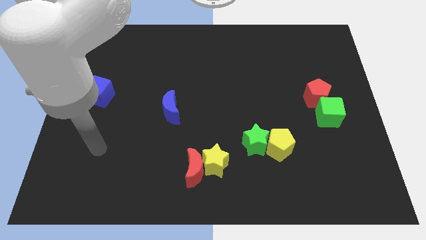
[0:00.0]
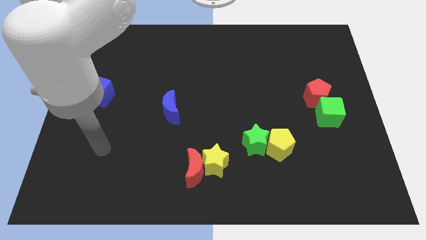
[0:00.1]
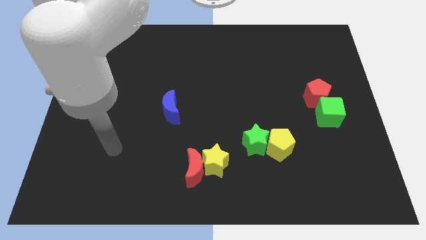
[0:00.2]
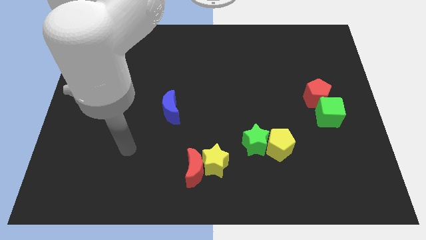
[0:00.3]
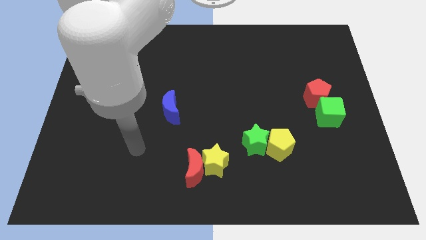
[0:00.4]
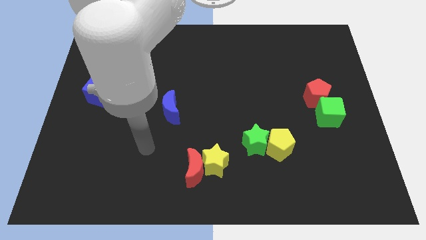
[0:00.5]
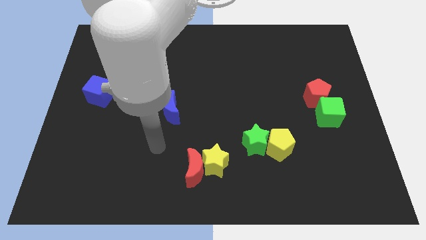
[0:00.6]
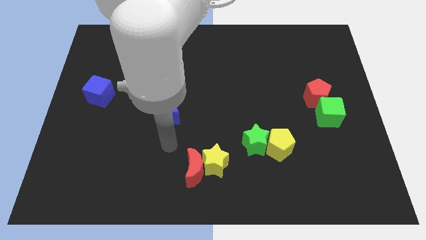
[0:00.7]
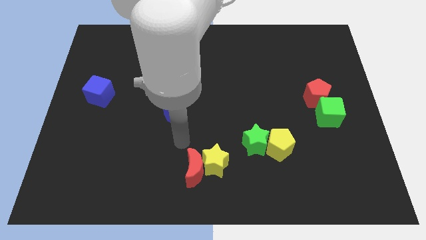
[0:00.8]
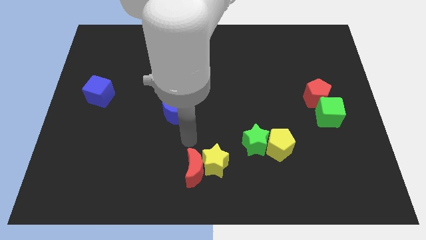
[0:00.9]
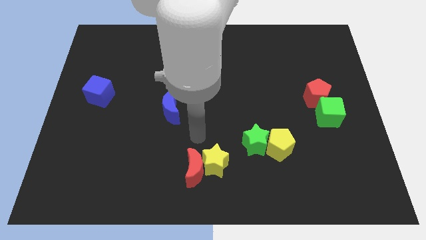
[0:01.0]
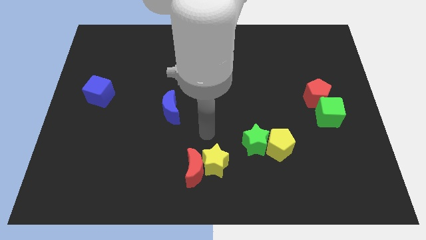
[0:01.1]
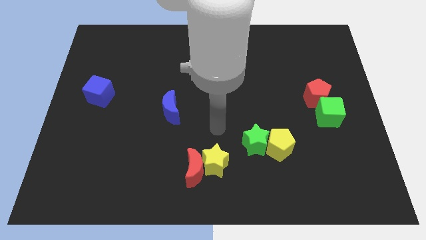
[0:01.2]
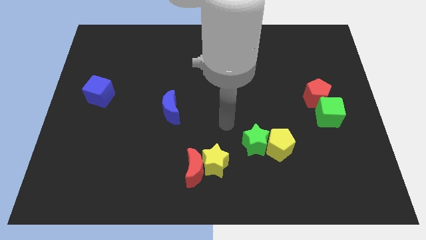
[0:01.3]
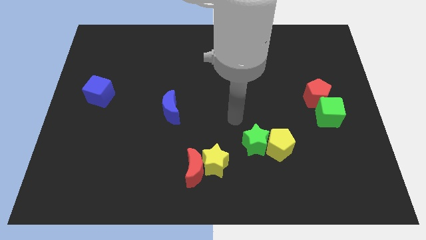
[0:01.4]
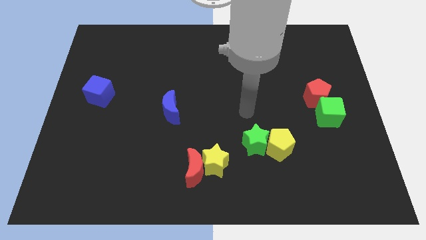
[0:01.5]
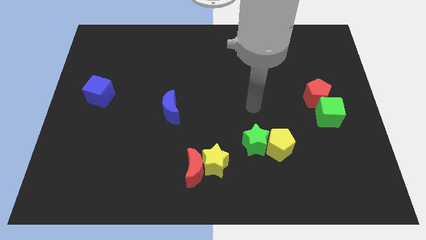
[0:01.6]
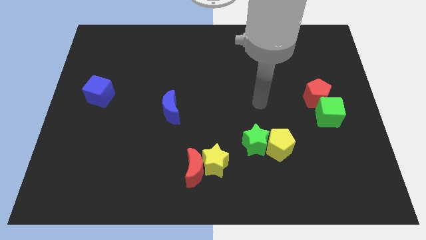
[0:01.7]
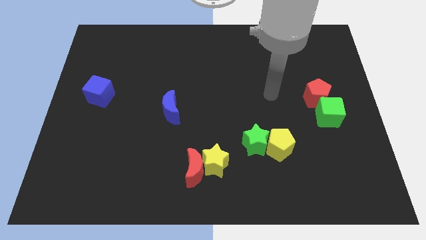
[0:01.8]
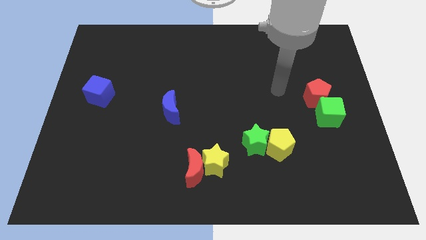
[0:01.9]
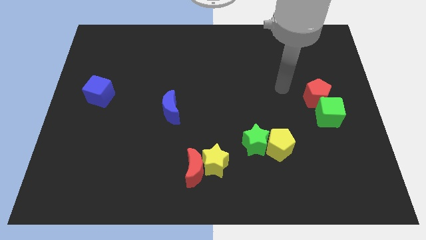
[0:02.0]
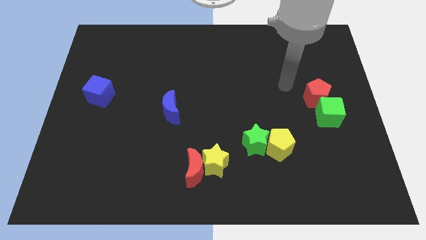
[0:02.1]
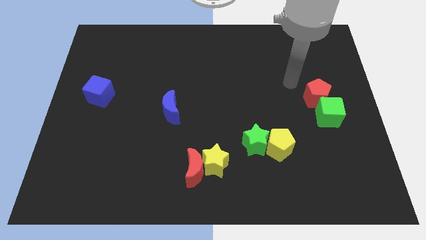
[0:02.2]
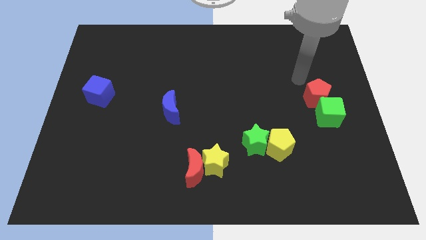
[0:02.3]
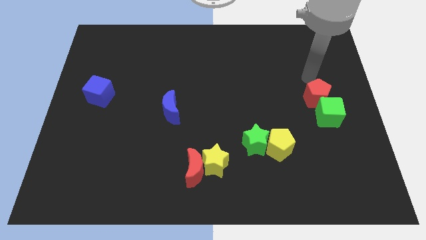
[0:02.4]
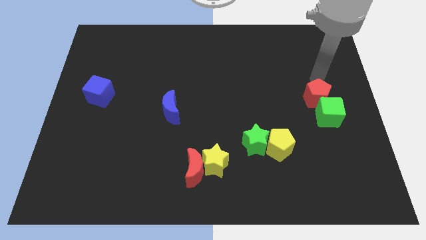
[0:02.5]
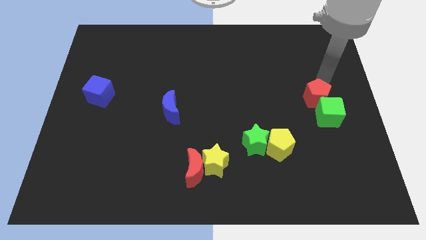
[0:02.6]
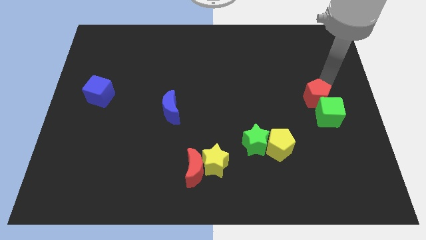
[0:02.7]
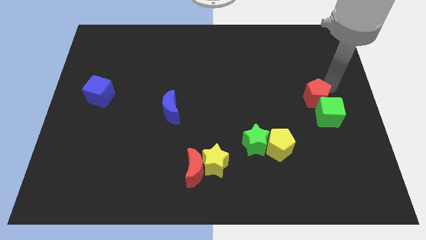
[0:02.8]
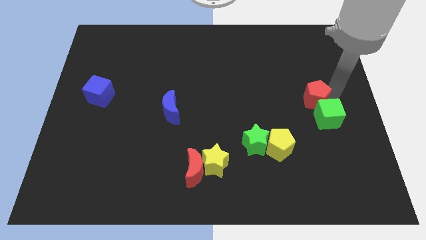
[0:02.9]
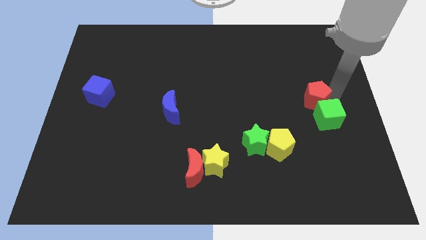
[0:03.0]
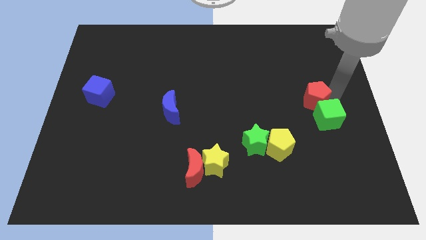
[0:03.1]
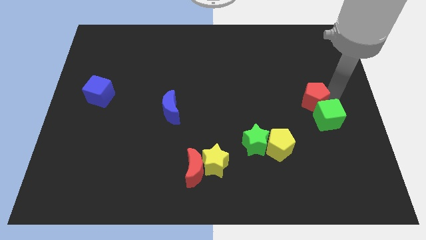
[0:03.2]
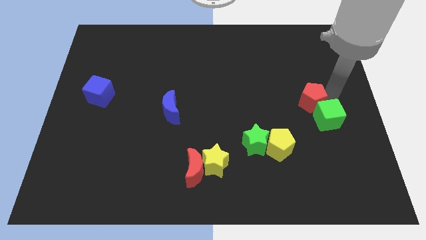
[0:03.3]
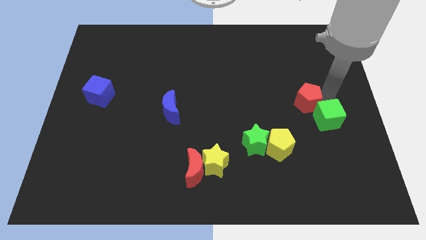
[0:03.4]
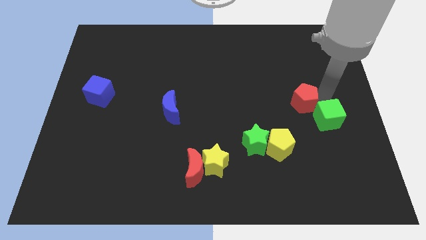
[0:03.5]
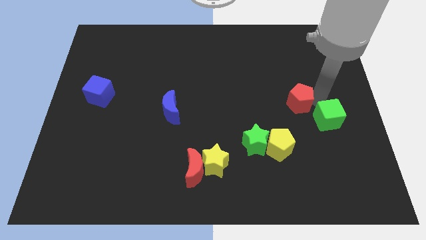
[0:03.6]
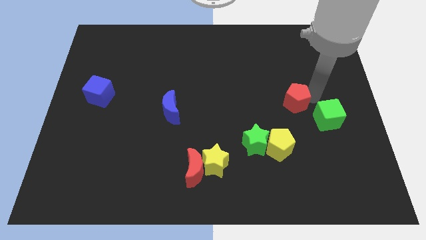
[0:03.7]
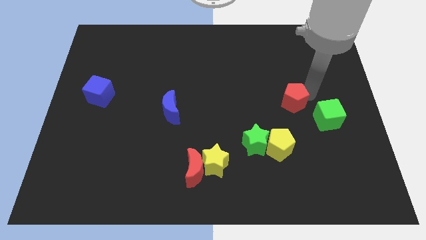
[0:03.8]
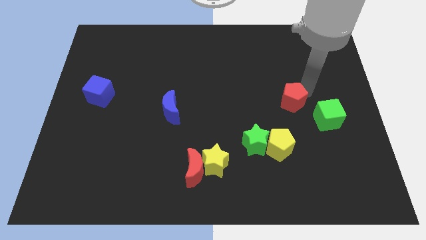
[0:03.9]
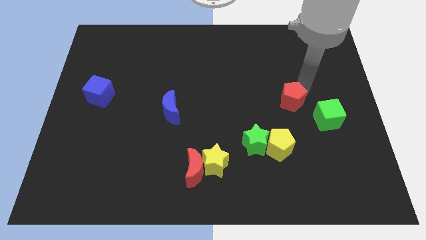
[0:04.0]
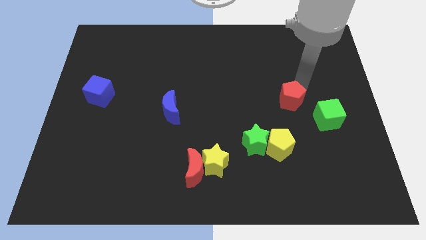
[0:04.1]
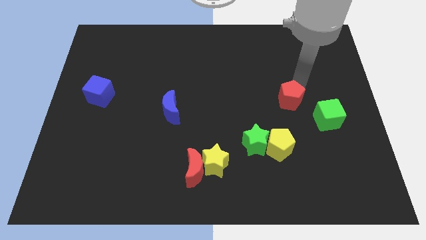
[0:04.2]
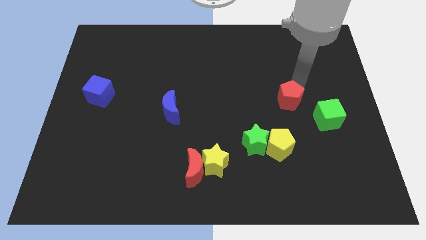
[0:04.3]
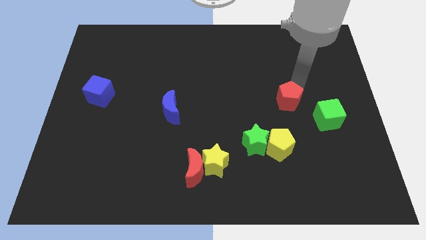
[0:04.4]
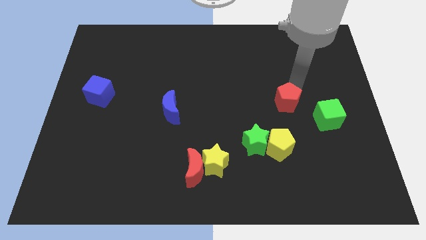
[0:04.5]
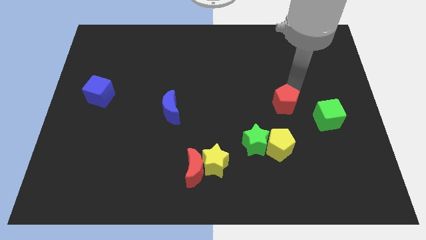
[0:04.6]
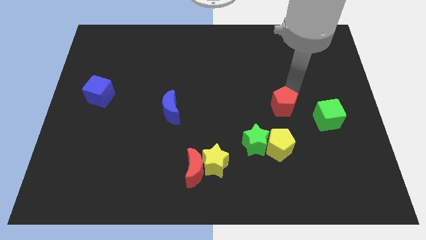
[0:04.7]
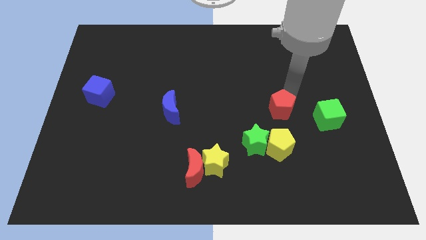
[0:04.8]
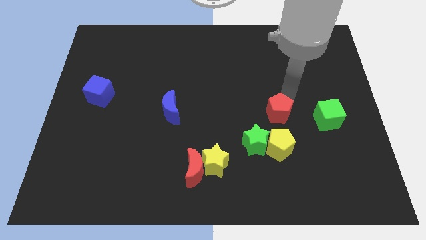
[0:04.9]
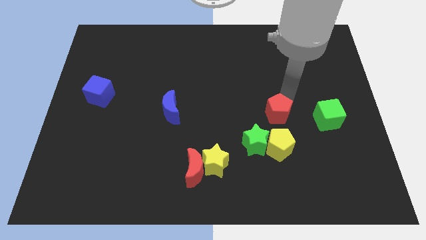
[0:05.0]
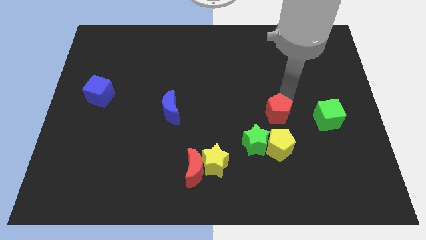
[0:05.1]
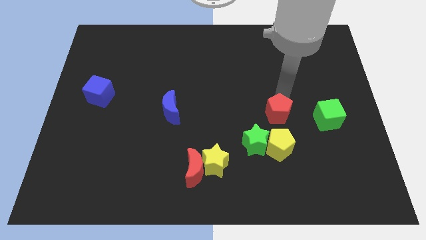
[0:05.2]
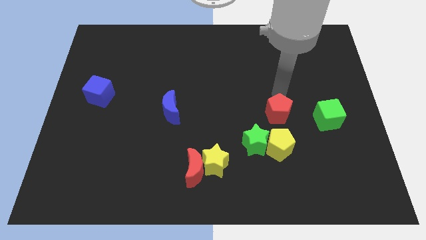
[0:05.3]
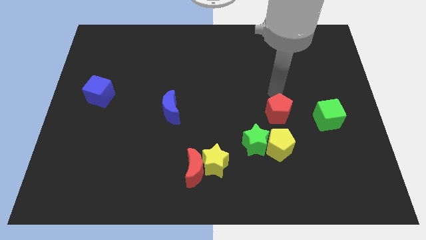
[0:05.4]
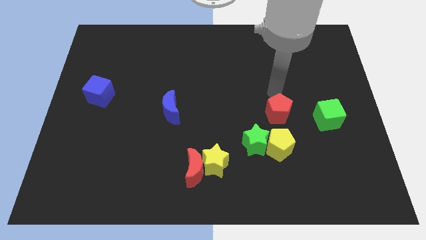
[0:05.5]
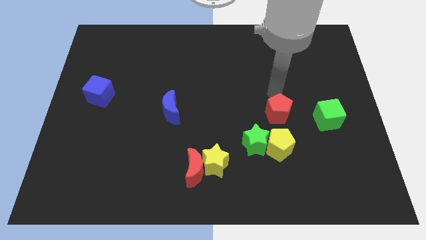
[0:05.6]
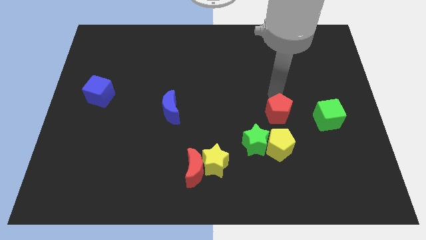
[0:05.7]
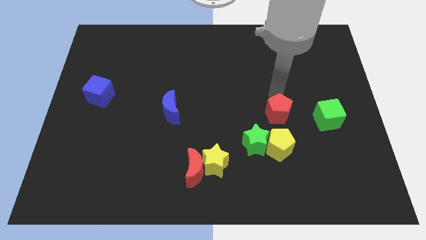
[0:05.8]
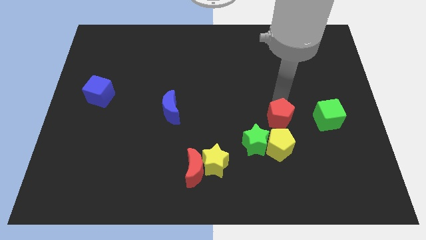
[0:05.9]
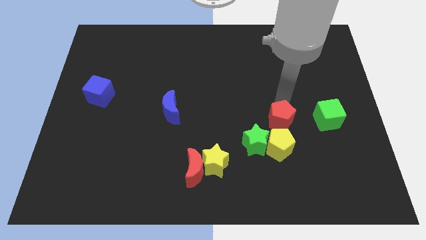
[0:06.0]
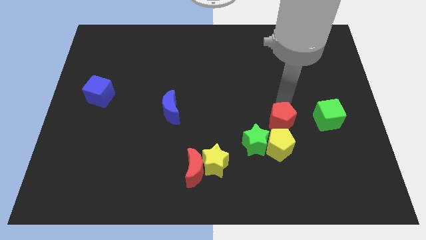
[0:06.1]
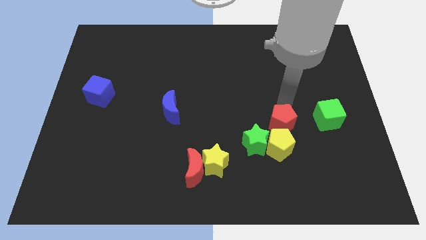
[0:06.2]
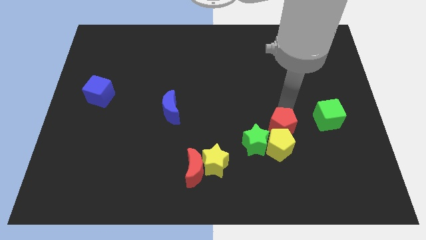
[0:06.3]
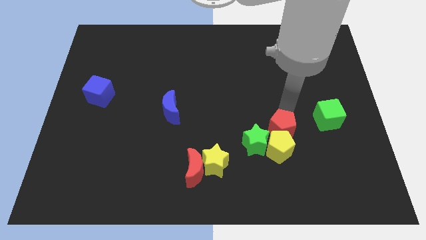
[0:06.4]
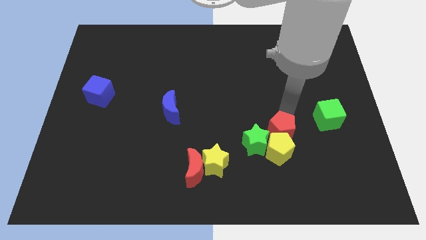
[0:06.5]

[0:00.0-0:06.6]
push the red pentagon towards the yellow pentagon

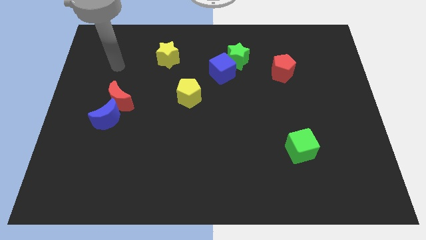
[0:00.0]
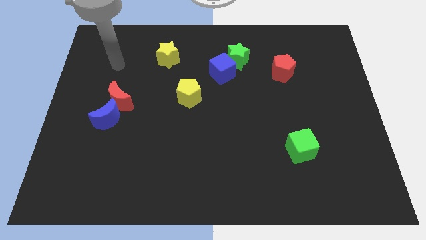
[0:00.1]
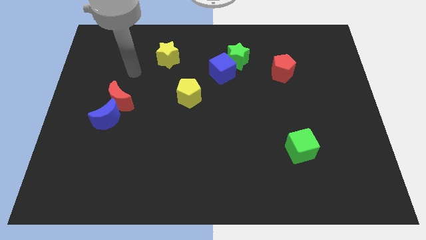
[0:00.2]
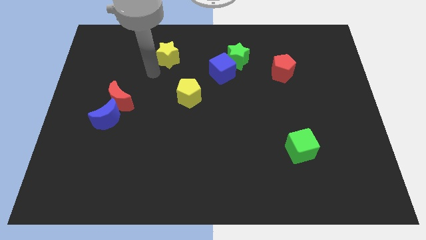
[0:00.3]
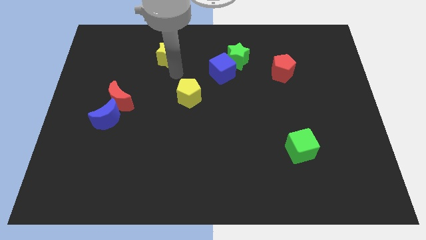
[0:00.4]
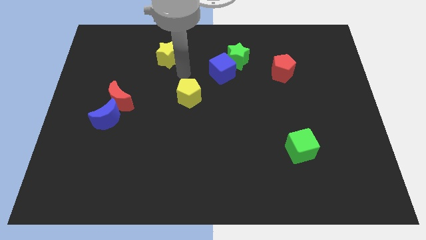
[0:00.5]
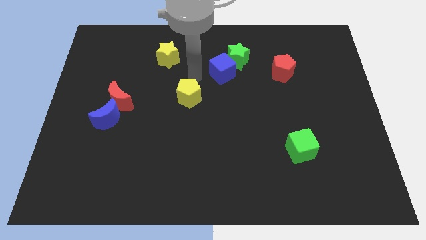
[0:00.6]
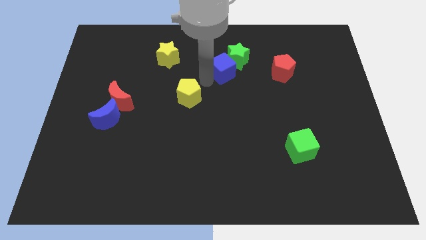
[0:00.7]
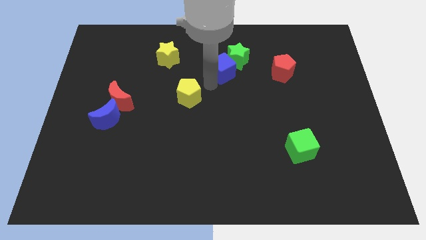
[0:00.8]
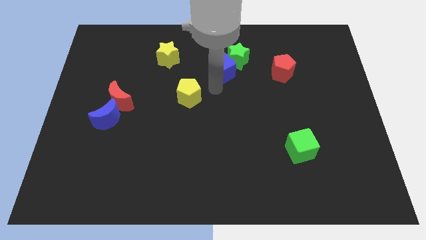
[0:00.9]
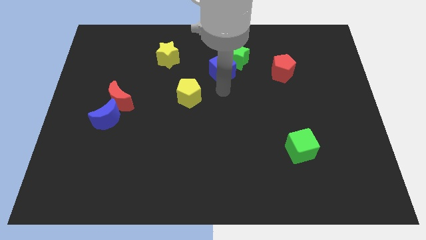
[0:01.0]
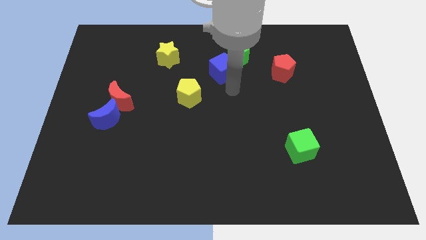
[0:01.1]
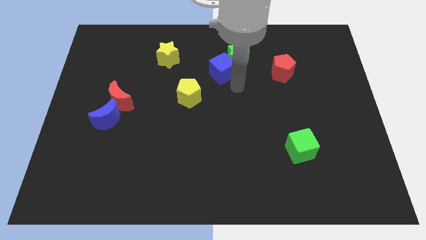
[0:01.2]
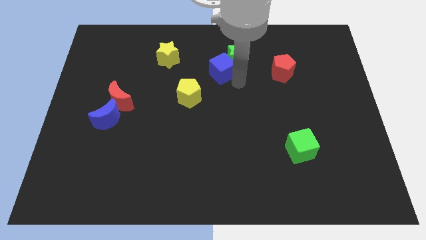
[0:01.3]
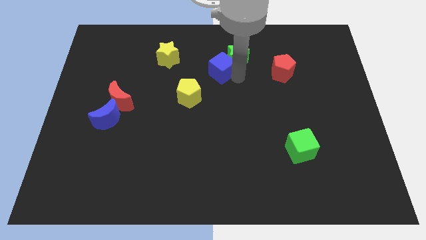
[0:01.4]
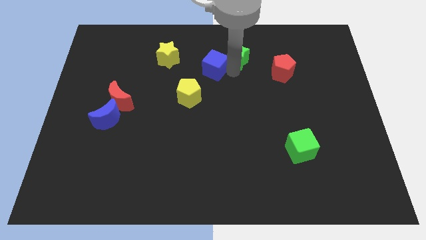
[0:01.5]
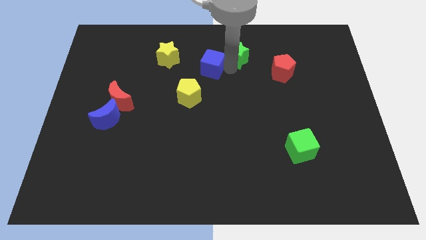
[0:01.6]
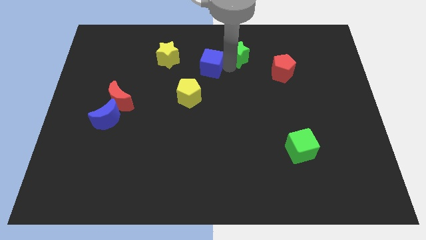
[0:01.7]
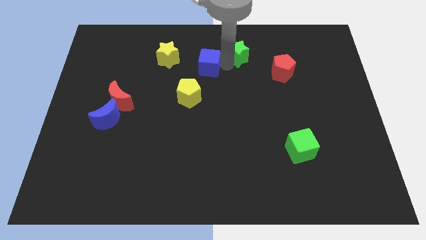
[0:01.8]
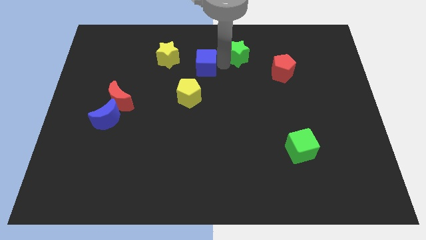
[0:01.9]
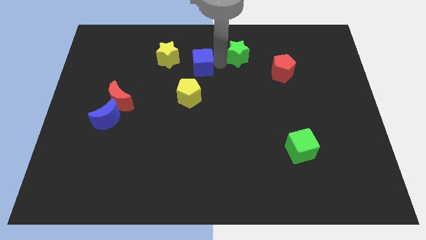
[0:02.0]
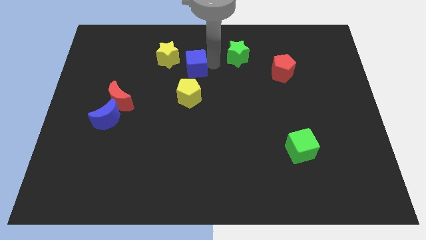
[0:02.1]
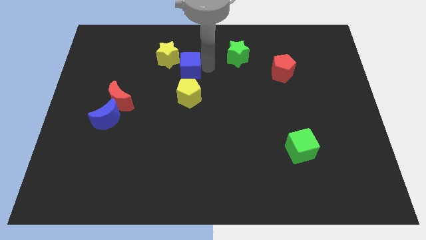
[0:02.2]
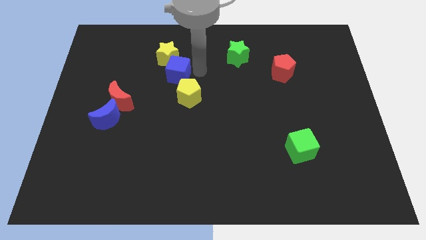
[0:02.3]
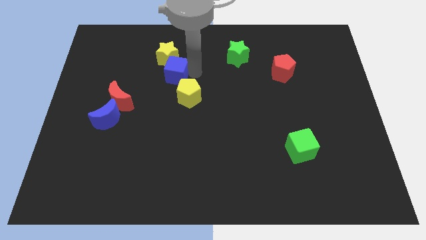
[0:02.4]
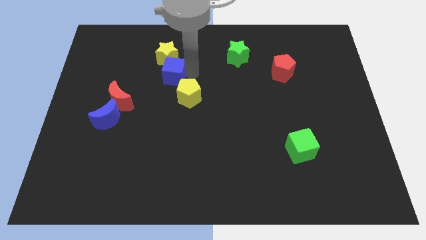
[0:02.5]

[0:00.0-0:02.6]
push the blue cube next to the yellow star
